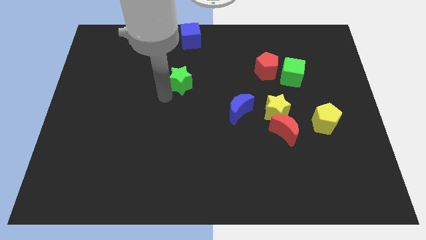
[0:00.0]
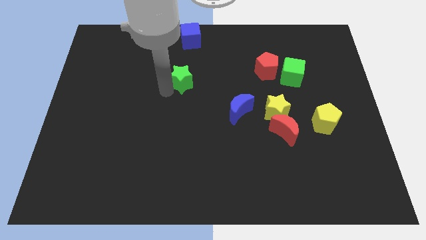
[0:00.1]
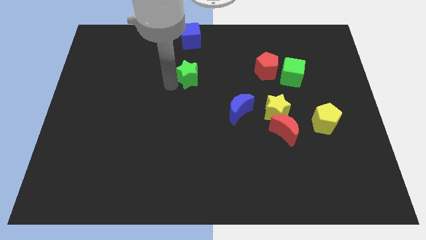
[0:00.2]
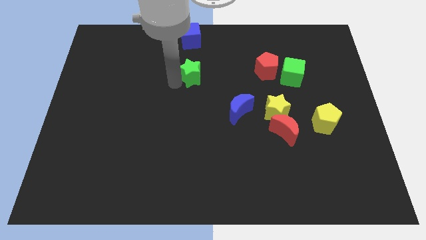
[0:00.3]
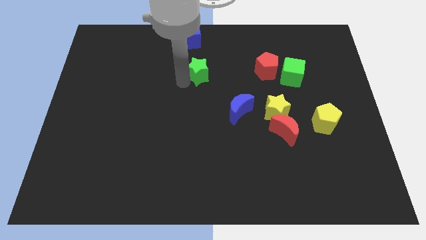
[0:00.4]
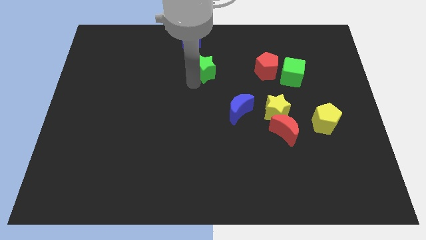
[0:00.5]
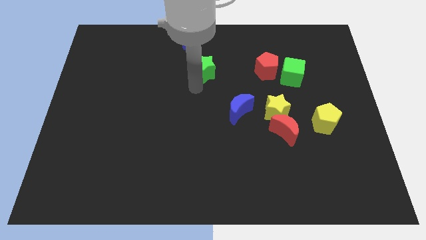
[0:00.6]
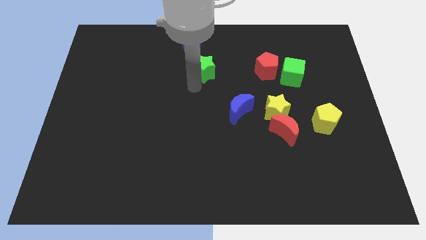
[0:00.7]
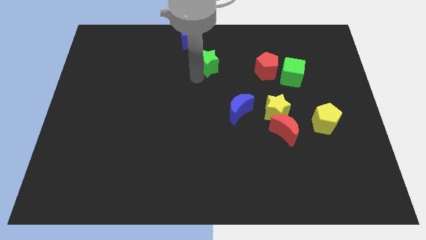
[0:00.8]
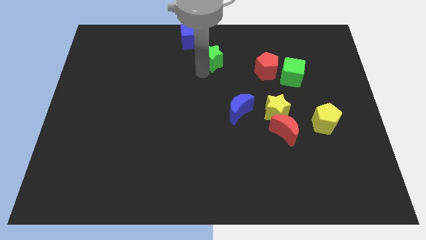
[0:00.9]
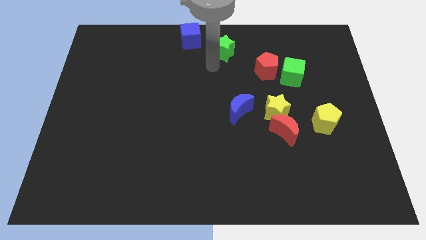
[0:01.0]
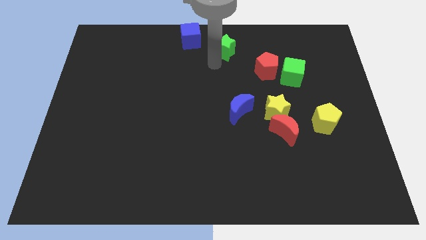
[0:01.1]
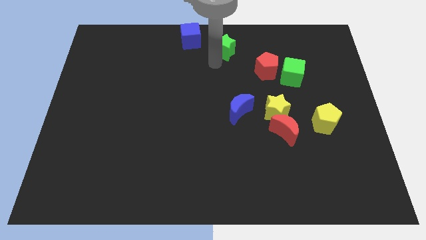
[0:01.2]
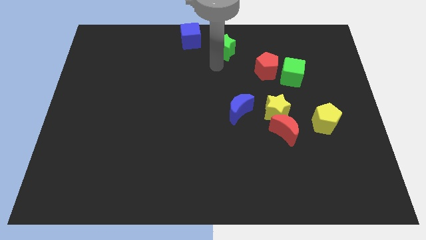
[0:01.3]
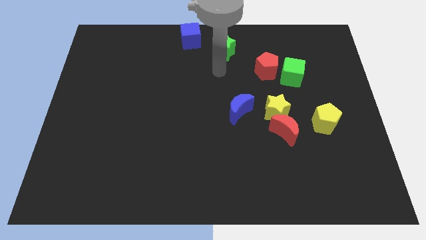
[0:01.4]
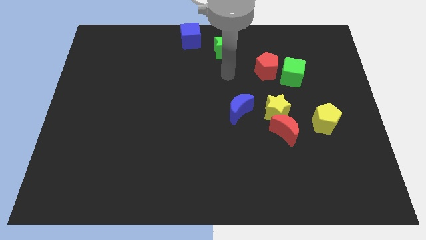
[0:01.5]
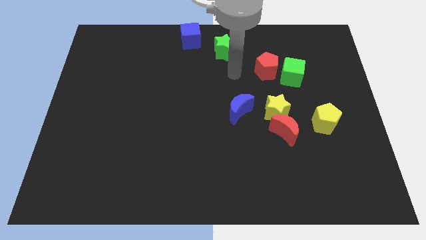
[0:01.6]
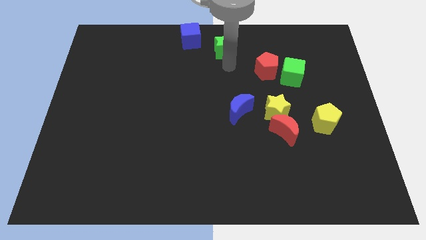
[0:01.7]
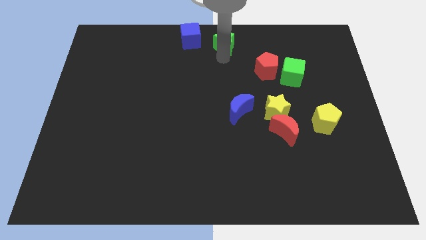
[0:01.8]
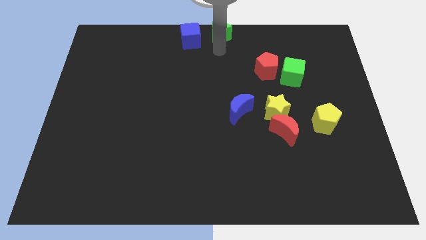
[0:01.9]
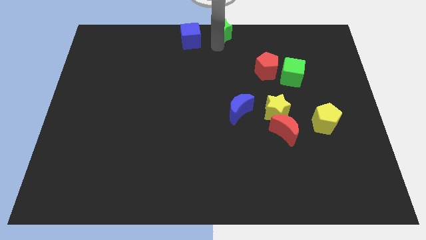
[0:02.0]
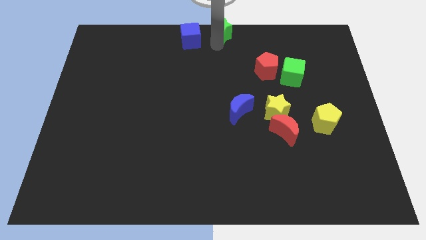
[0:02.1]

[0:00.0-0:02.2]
move the green star to the right of the blue cube at the top center

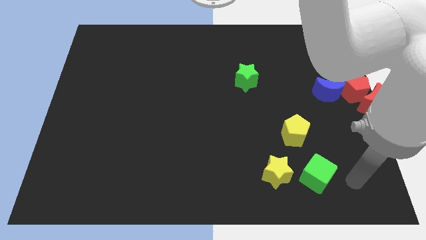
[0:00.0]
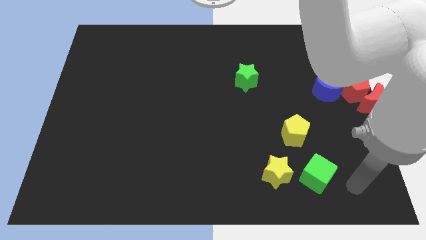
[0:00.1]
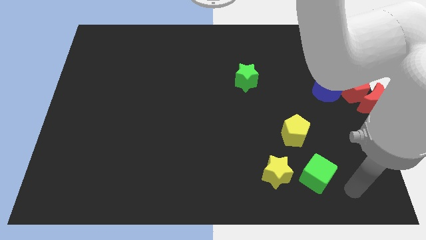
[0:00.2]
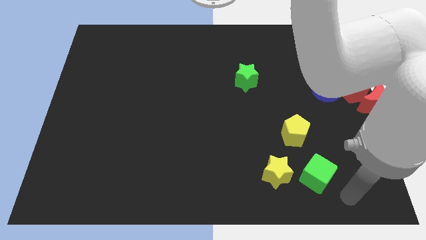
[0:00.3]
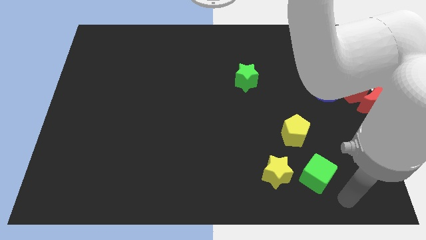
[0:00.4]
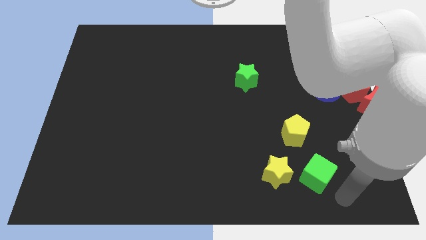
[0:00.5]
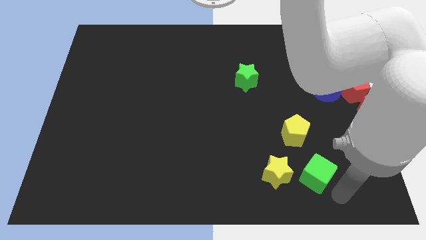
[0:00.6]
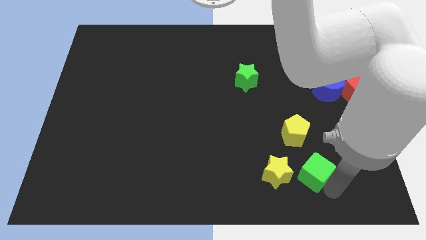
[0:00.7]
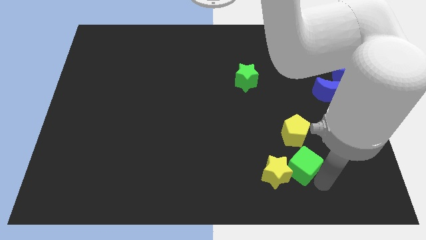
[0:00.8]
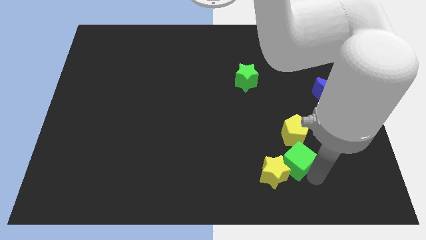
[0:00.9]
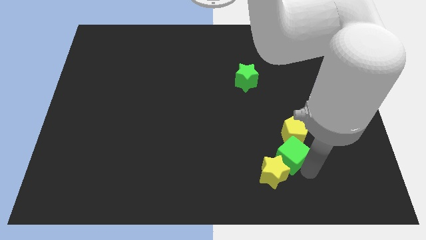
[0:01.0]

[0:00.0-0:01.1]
slide green cube into yellow blocks

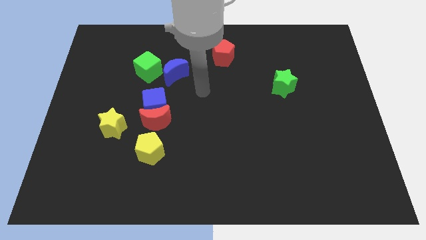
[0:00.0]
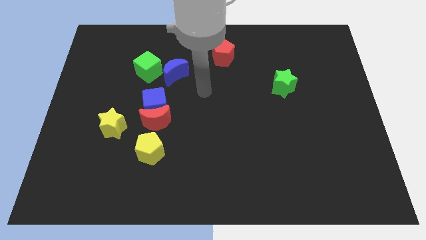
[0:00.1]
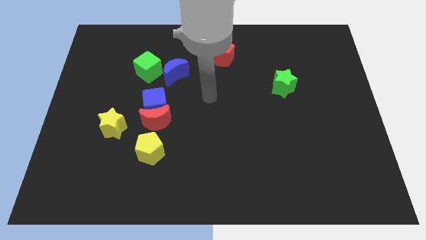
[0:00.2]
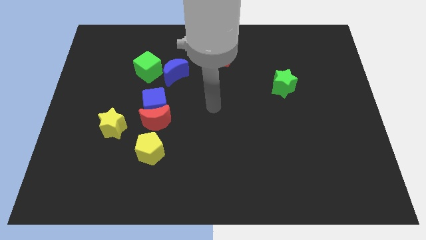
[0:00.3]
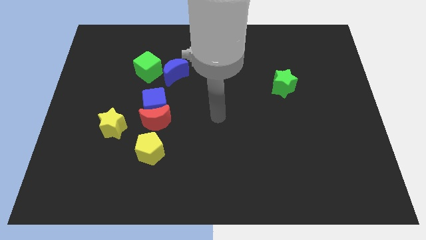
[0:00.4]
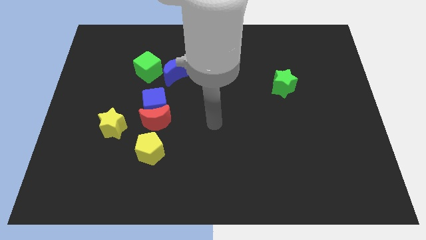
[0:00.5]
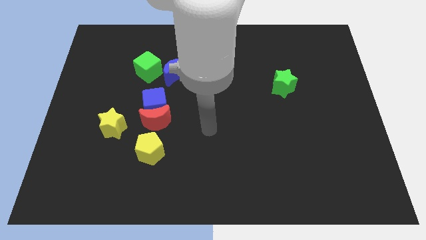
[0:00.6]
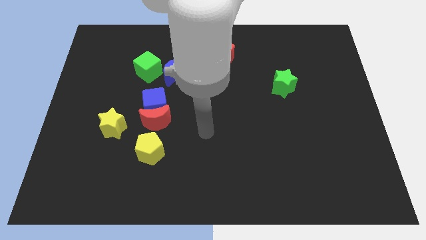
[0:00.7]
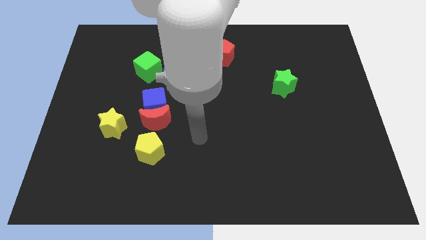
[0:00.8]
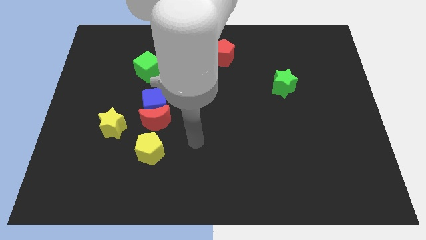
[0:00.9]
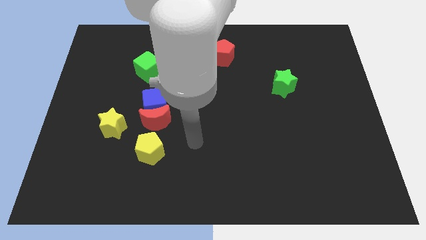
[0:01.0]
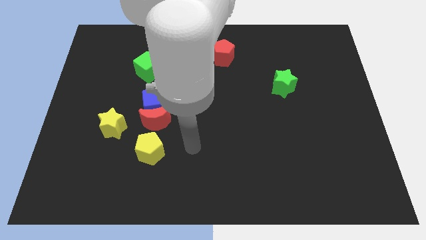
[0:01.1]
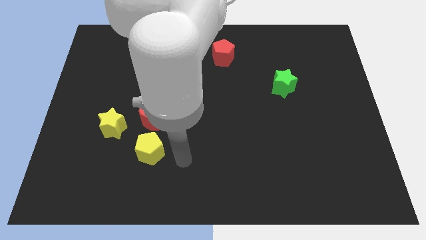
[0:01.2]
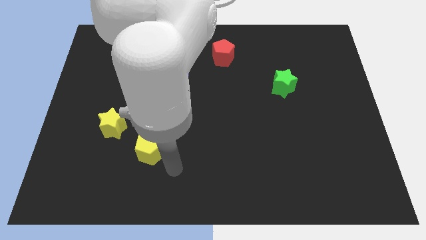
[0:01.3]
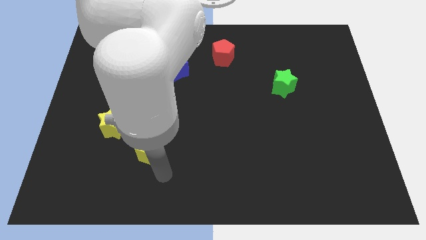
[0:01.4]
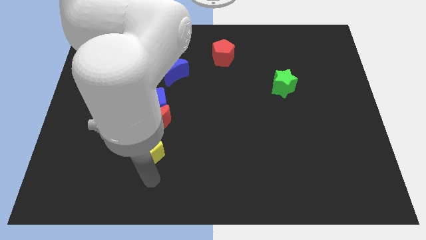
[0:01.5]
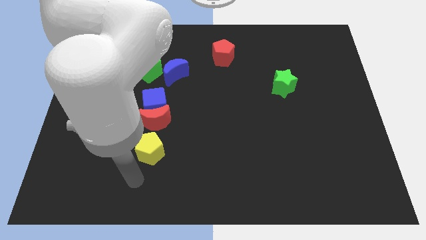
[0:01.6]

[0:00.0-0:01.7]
place your hand vertically below the yellow pentagon

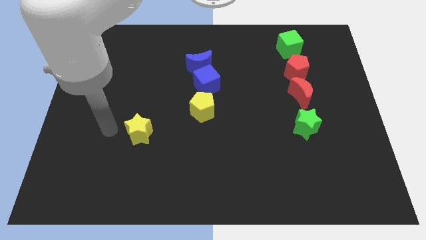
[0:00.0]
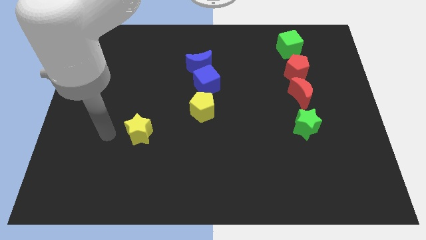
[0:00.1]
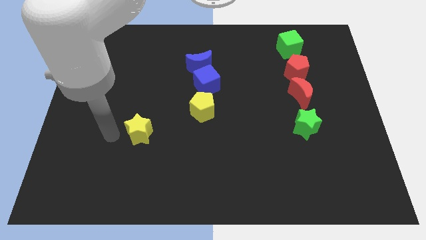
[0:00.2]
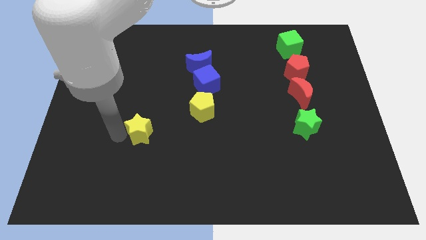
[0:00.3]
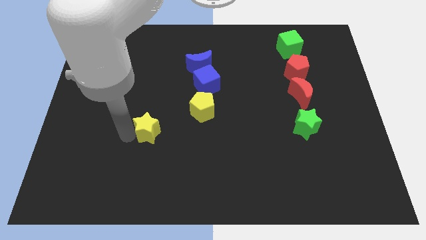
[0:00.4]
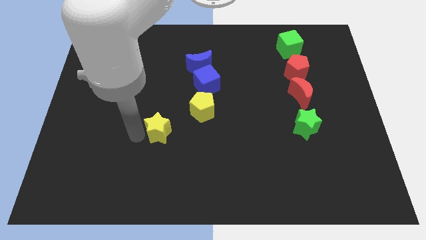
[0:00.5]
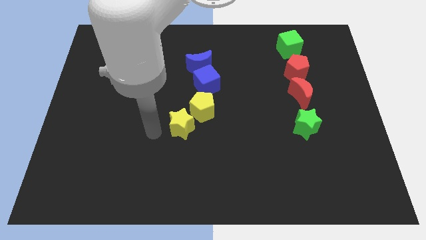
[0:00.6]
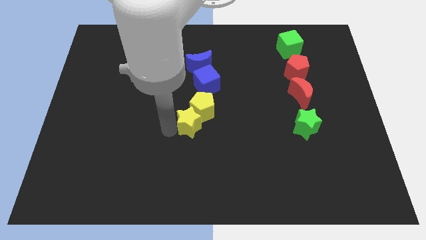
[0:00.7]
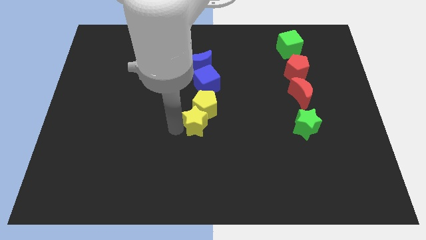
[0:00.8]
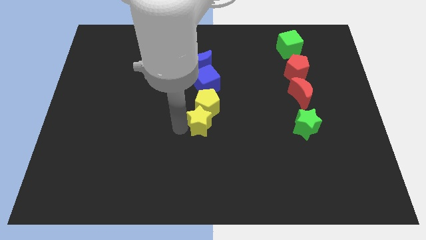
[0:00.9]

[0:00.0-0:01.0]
push the yellow star into the yellow pentagon

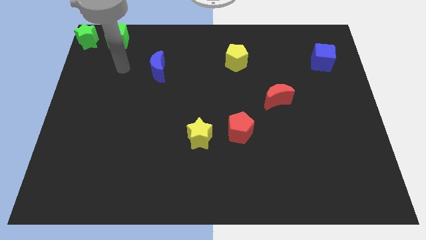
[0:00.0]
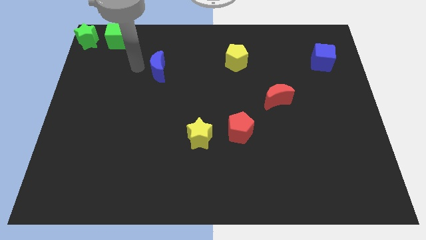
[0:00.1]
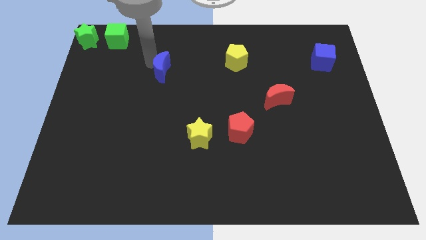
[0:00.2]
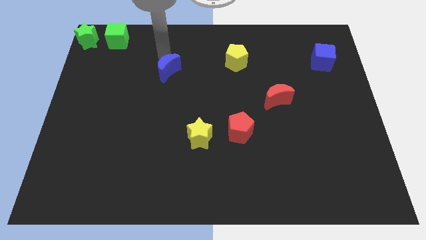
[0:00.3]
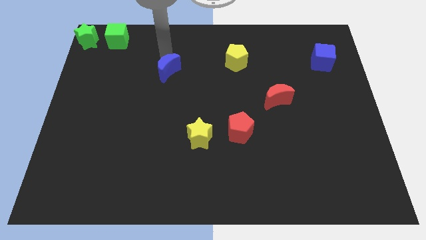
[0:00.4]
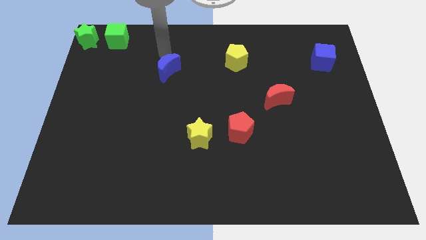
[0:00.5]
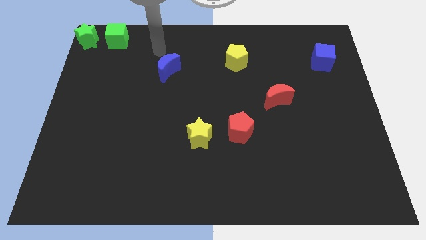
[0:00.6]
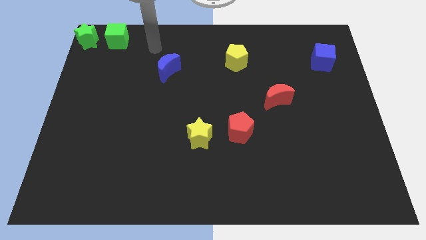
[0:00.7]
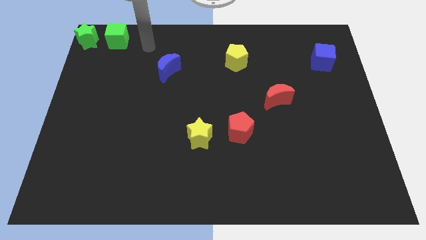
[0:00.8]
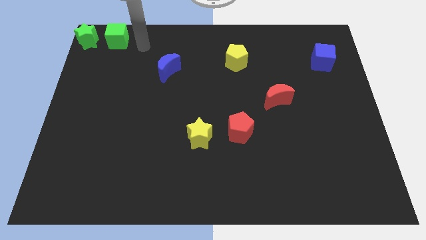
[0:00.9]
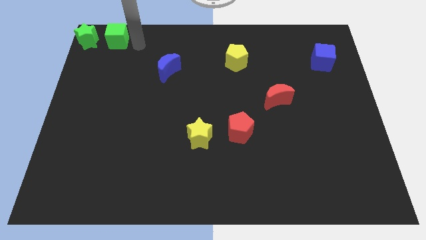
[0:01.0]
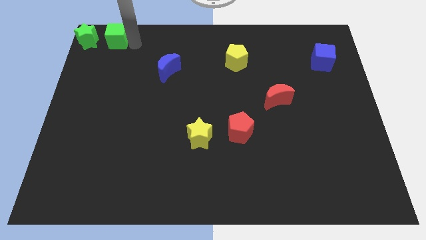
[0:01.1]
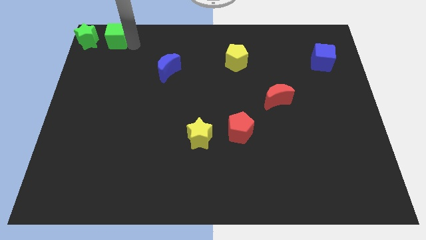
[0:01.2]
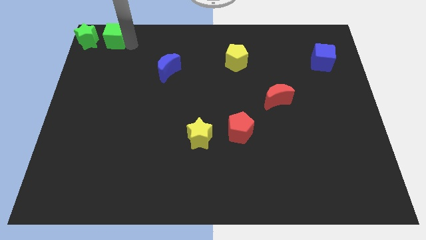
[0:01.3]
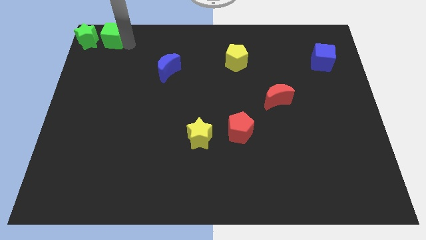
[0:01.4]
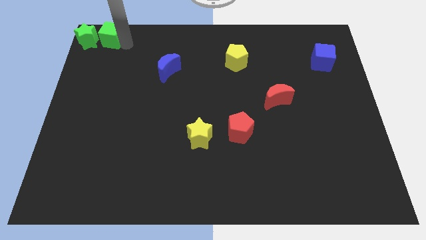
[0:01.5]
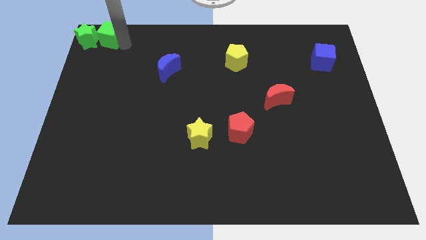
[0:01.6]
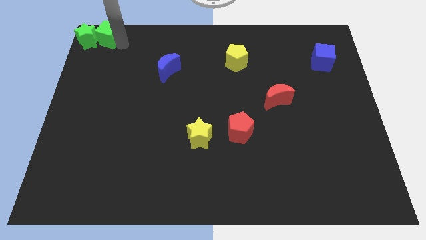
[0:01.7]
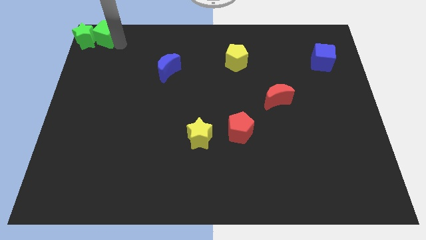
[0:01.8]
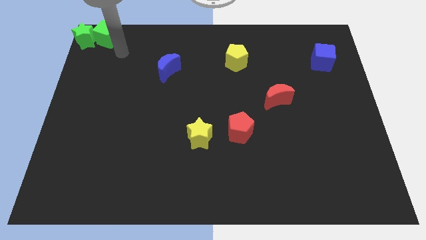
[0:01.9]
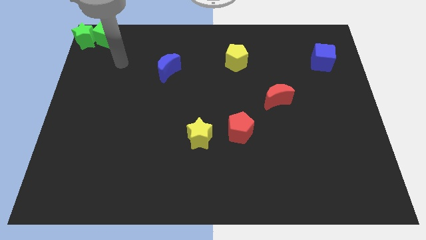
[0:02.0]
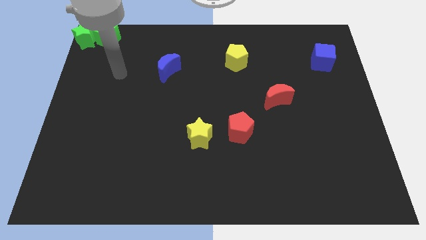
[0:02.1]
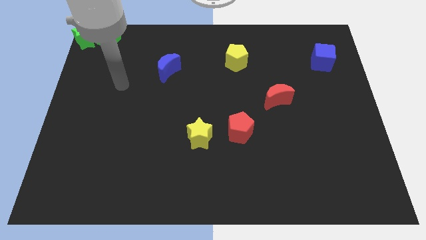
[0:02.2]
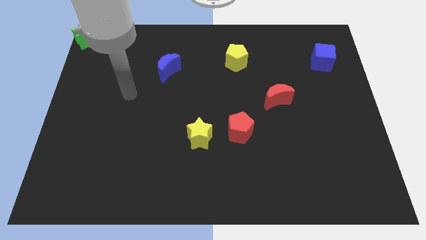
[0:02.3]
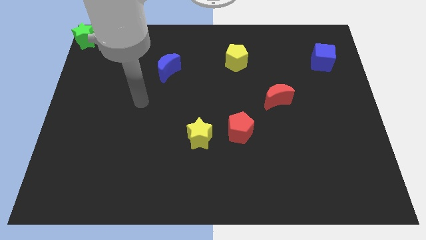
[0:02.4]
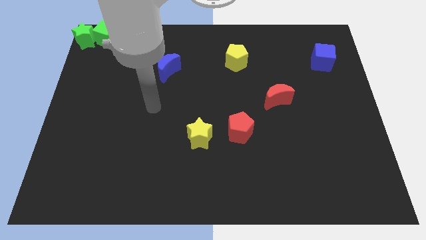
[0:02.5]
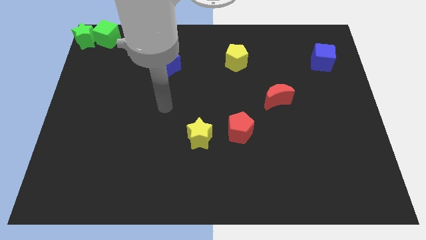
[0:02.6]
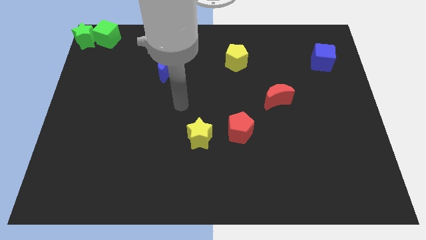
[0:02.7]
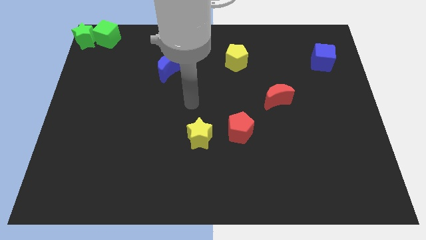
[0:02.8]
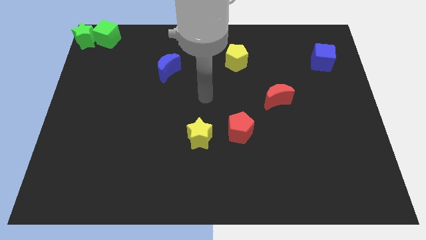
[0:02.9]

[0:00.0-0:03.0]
push green cube into green star
